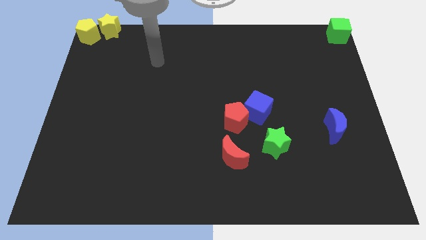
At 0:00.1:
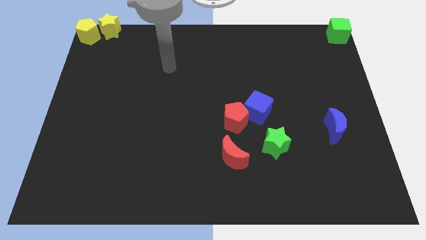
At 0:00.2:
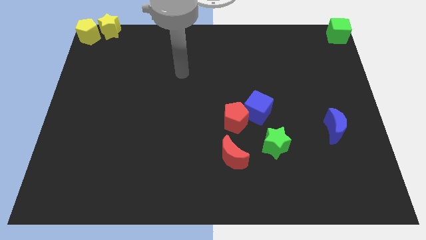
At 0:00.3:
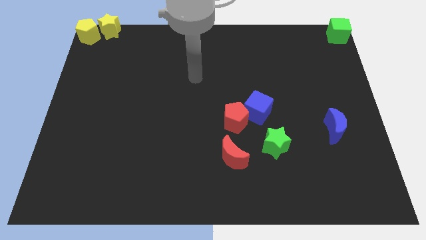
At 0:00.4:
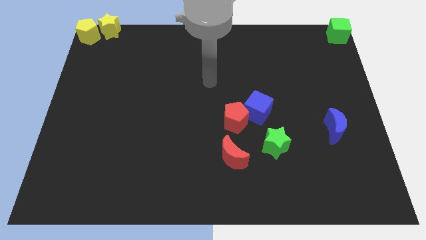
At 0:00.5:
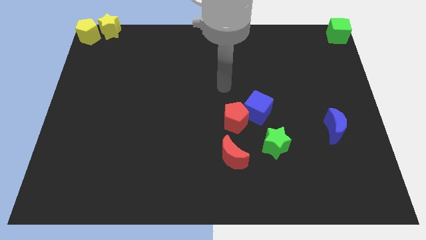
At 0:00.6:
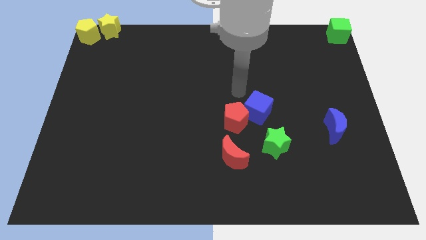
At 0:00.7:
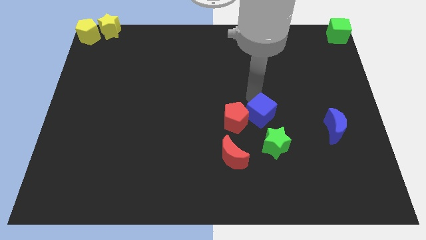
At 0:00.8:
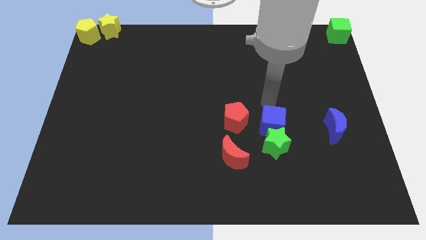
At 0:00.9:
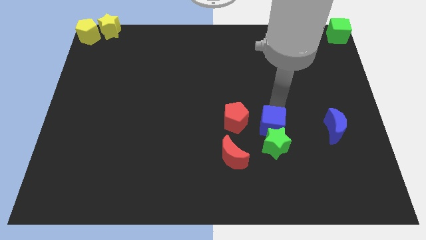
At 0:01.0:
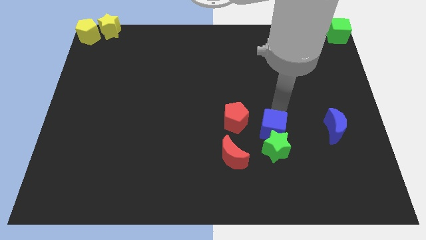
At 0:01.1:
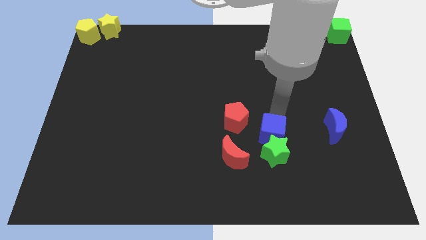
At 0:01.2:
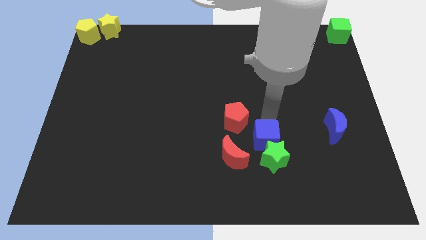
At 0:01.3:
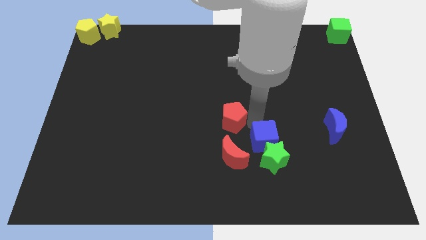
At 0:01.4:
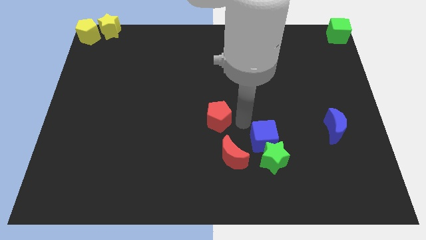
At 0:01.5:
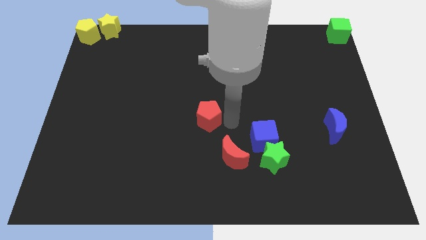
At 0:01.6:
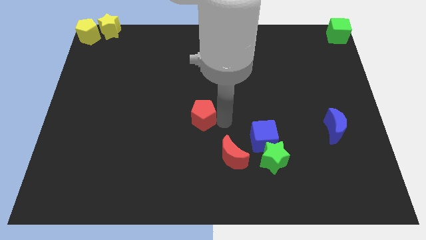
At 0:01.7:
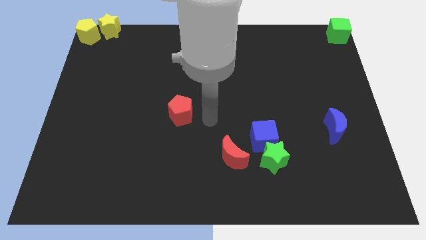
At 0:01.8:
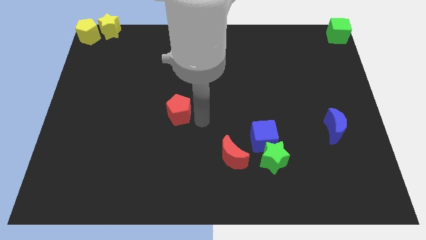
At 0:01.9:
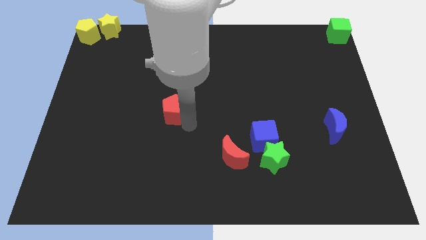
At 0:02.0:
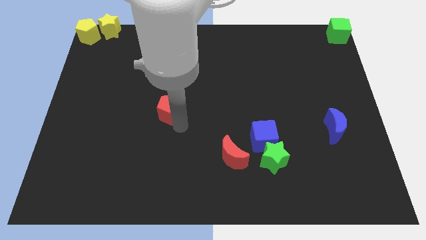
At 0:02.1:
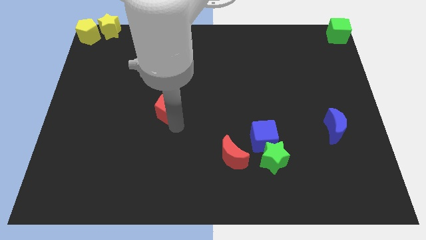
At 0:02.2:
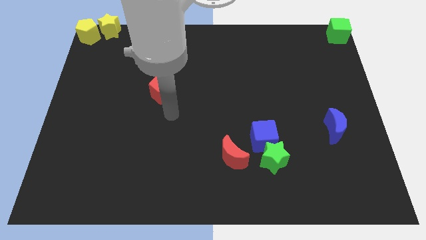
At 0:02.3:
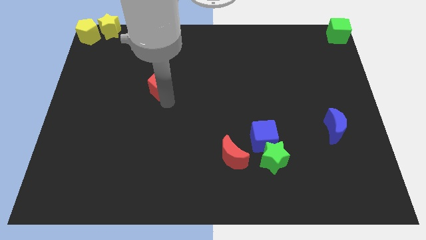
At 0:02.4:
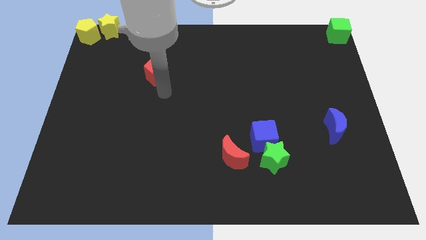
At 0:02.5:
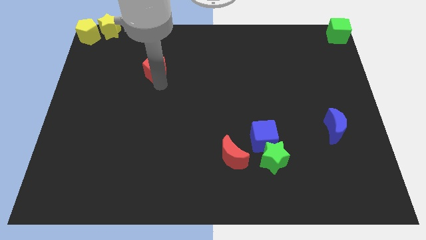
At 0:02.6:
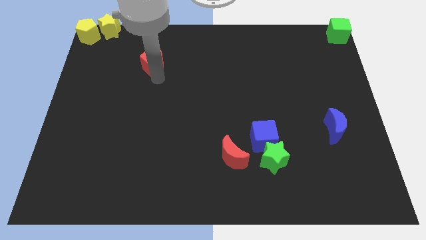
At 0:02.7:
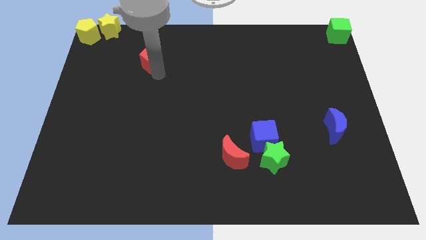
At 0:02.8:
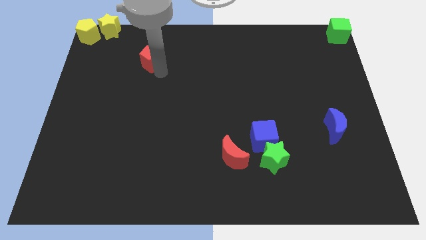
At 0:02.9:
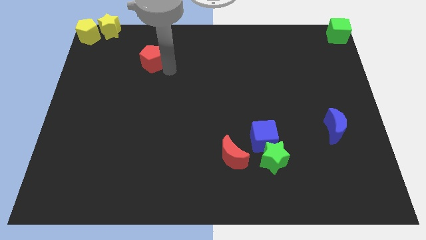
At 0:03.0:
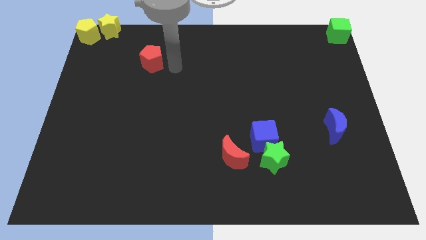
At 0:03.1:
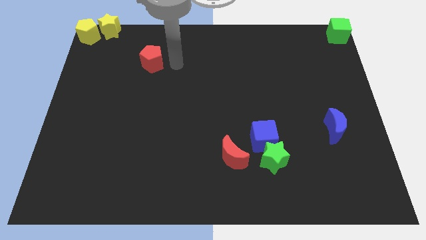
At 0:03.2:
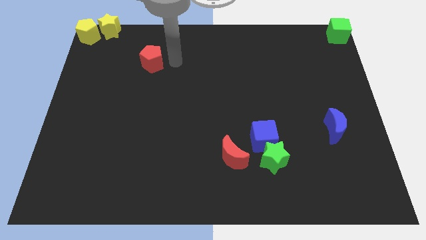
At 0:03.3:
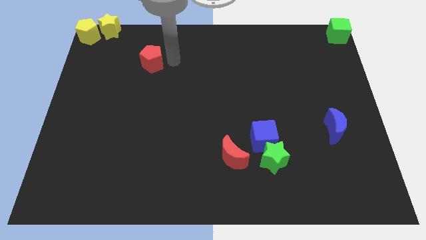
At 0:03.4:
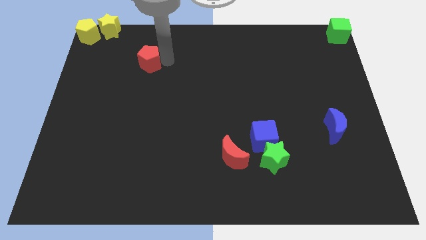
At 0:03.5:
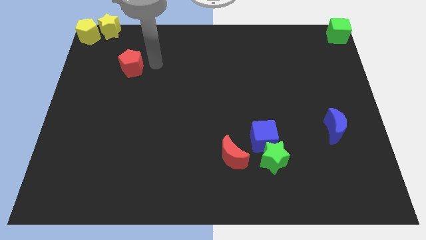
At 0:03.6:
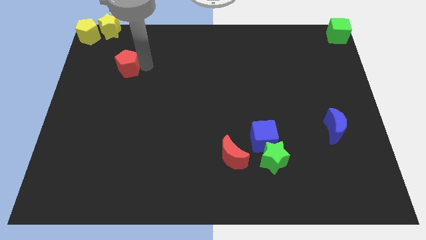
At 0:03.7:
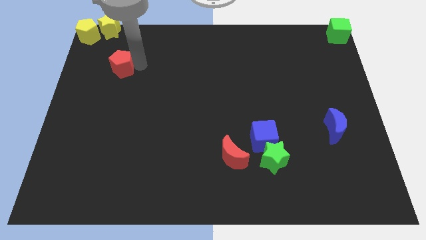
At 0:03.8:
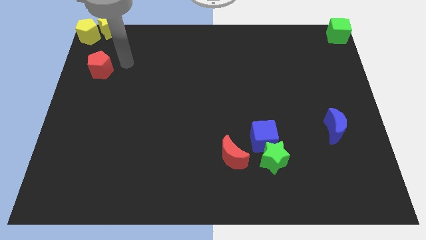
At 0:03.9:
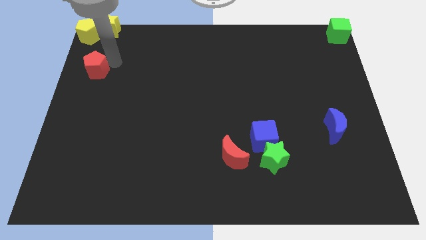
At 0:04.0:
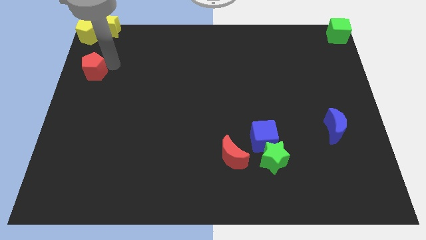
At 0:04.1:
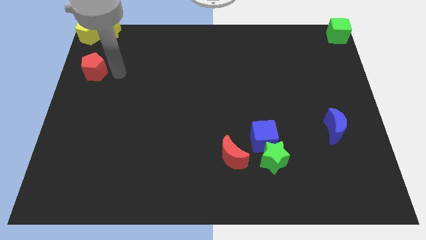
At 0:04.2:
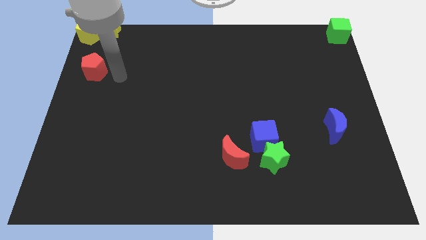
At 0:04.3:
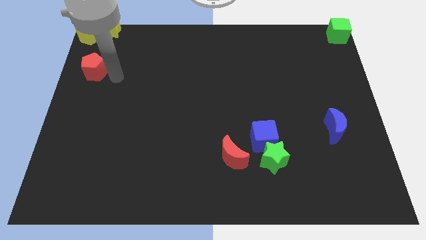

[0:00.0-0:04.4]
push the red pentagon to the left of the board

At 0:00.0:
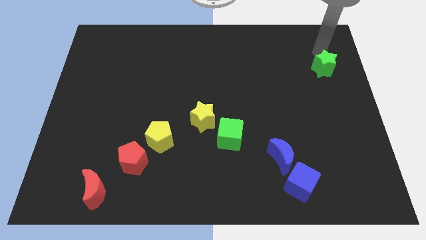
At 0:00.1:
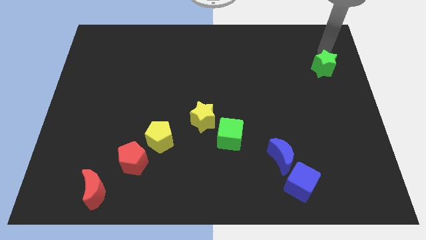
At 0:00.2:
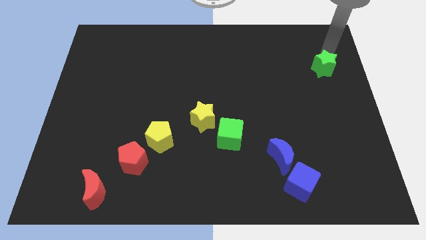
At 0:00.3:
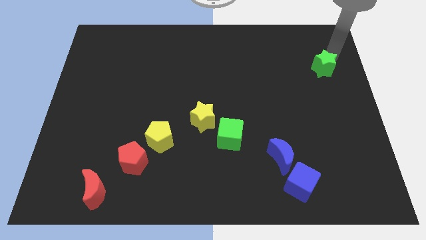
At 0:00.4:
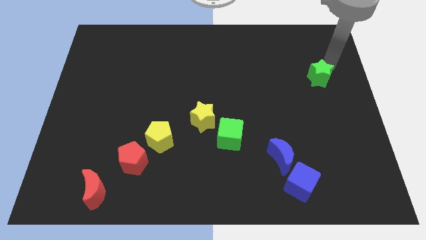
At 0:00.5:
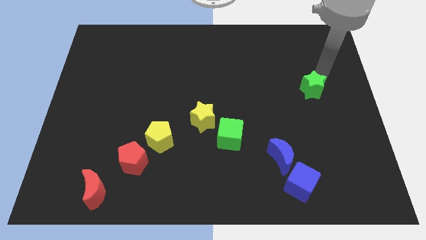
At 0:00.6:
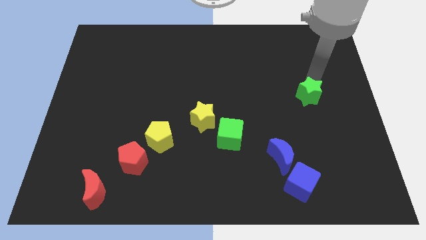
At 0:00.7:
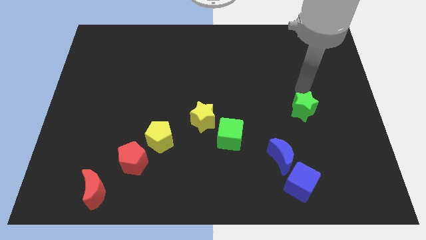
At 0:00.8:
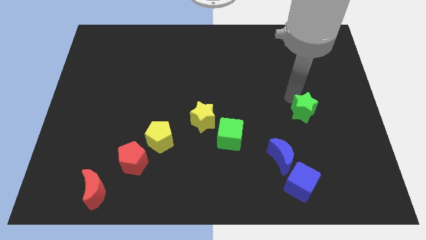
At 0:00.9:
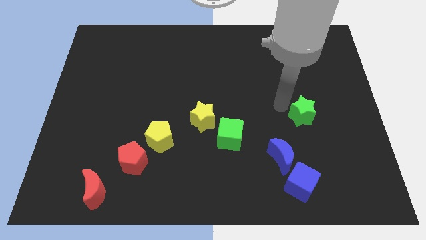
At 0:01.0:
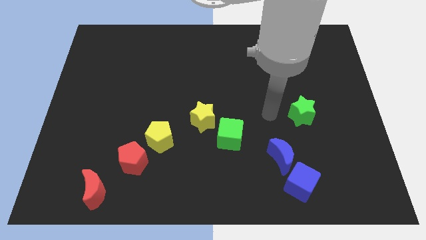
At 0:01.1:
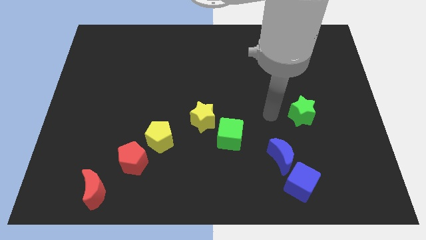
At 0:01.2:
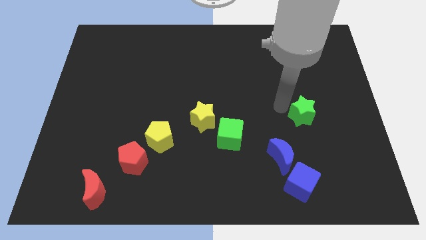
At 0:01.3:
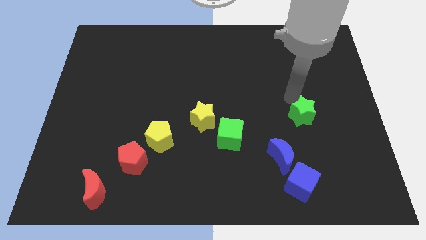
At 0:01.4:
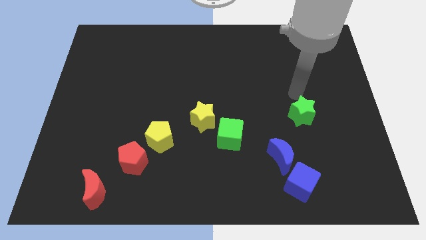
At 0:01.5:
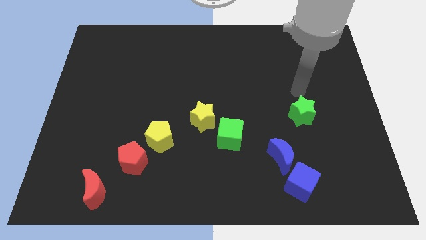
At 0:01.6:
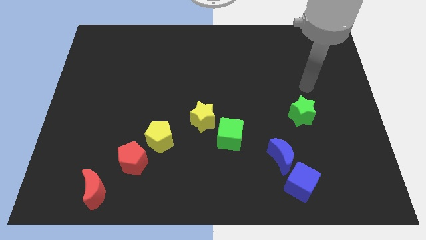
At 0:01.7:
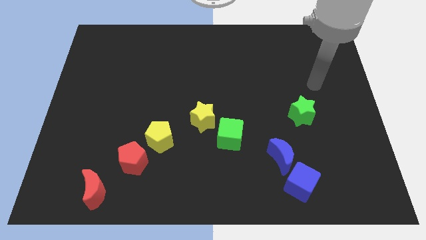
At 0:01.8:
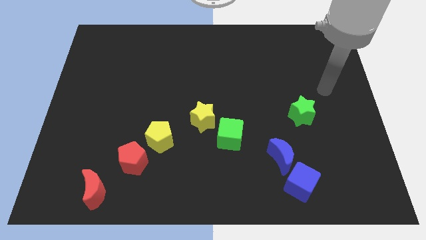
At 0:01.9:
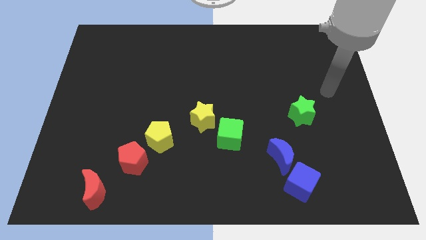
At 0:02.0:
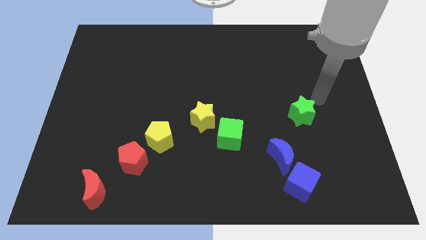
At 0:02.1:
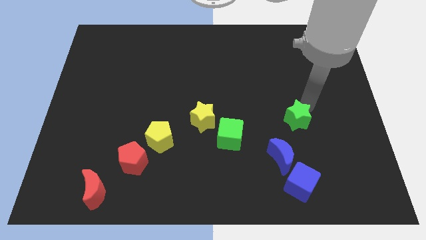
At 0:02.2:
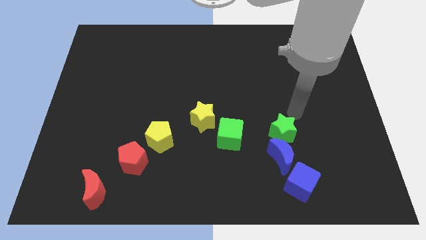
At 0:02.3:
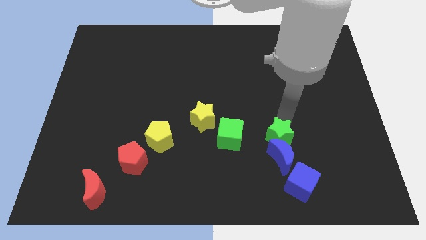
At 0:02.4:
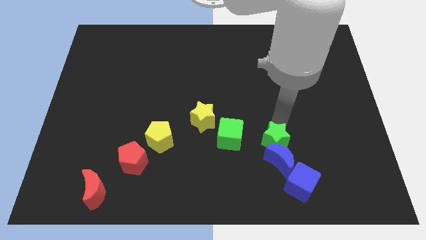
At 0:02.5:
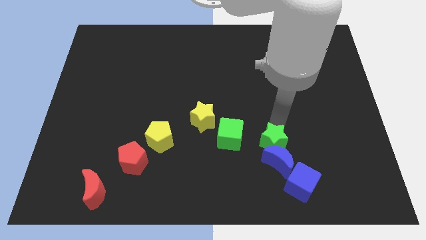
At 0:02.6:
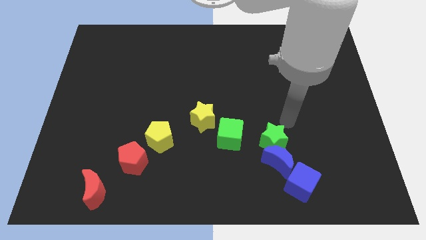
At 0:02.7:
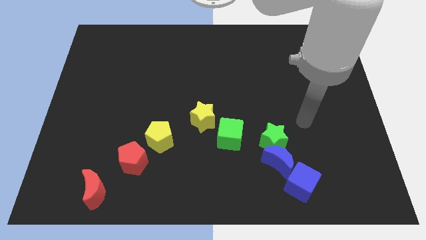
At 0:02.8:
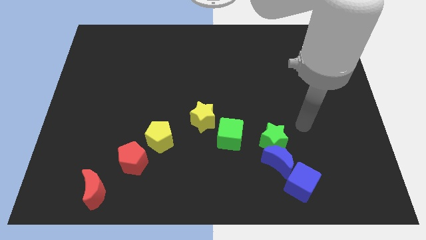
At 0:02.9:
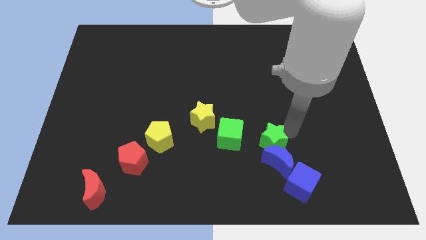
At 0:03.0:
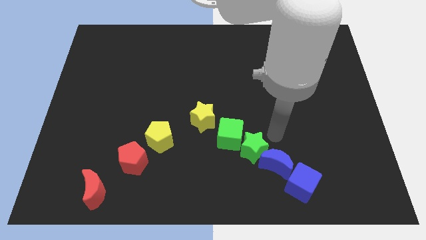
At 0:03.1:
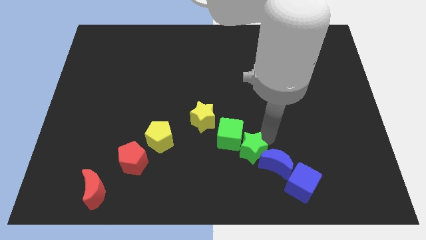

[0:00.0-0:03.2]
push the green star diagonally in between the green cube and blue moon

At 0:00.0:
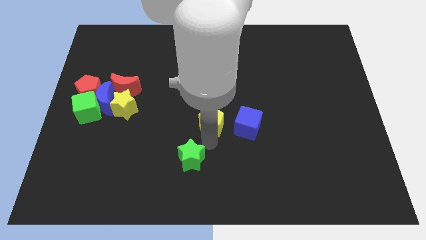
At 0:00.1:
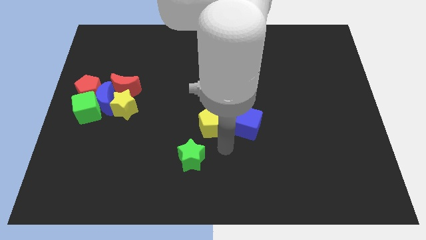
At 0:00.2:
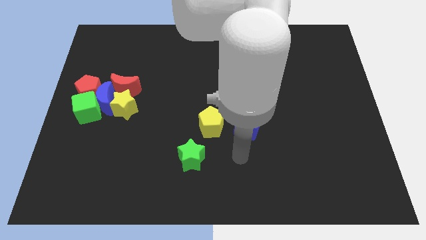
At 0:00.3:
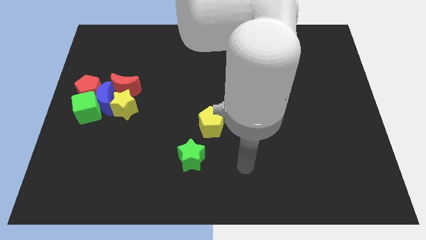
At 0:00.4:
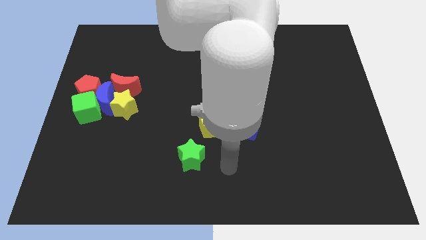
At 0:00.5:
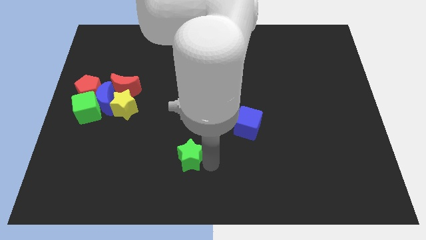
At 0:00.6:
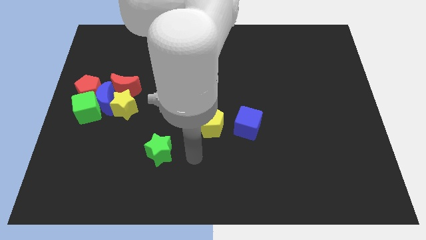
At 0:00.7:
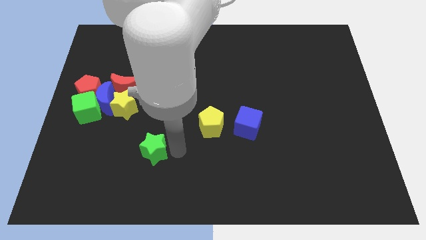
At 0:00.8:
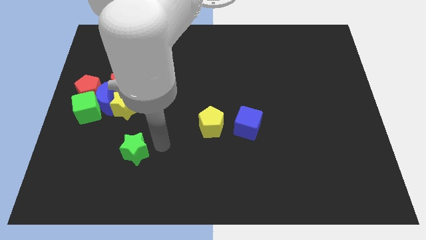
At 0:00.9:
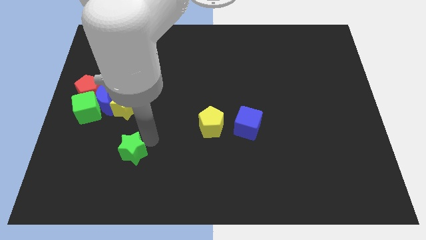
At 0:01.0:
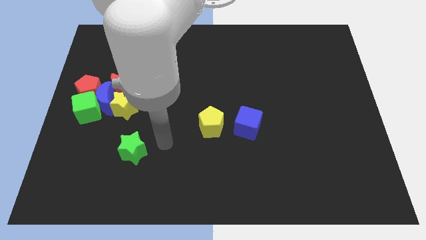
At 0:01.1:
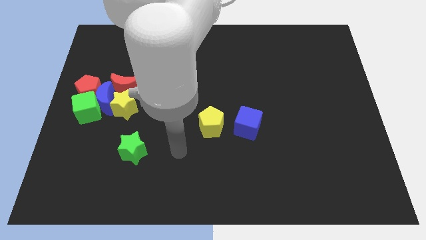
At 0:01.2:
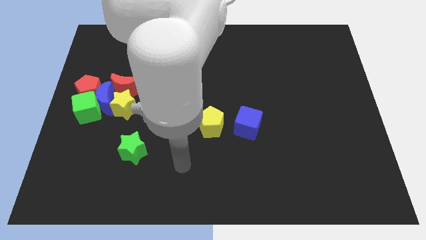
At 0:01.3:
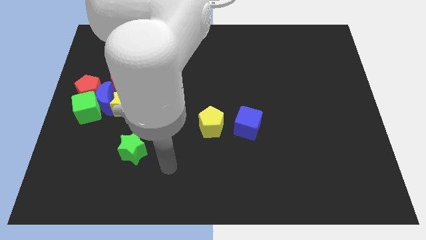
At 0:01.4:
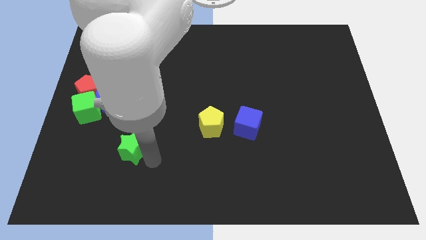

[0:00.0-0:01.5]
separate green star from yellow pentagon
